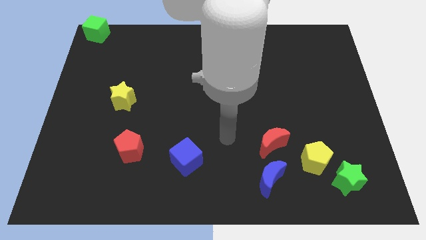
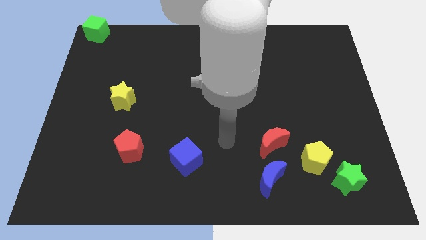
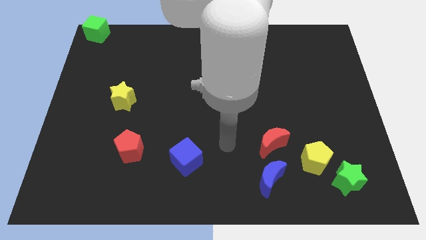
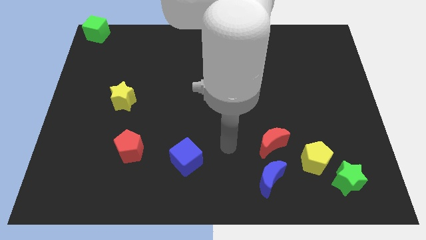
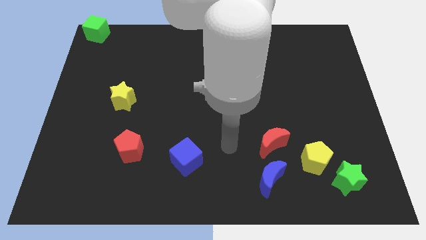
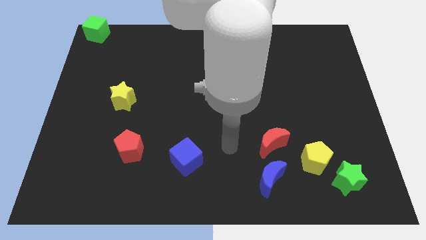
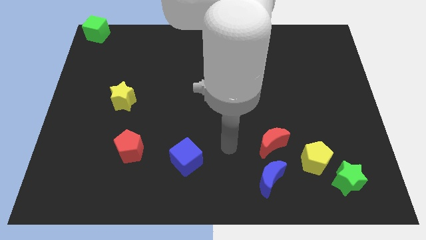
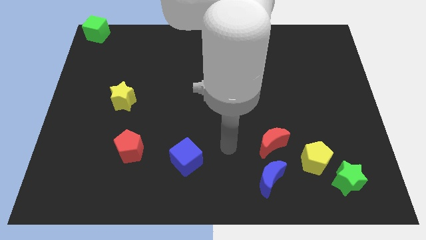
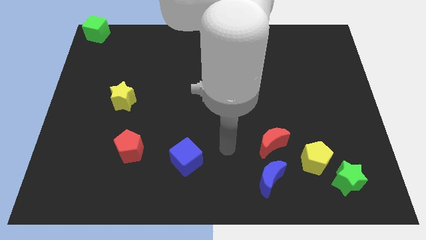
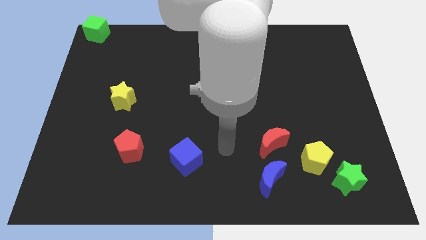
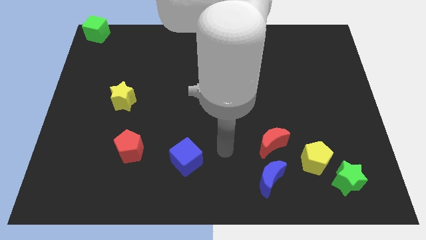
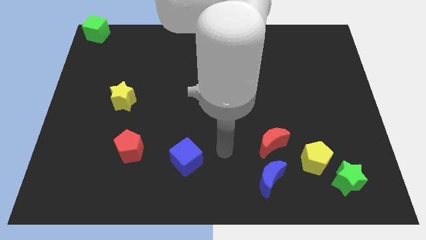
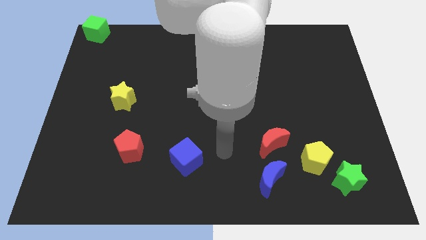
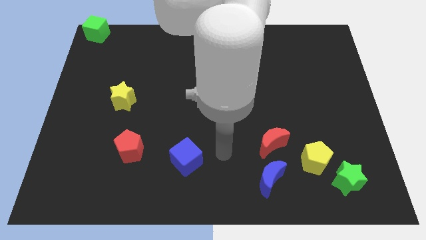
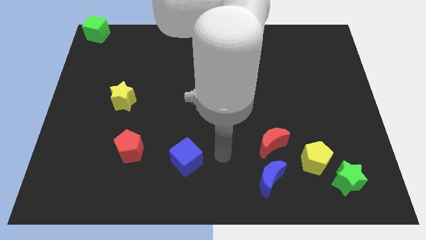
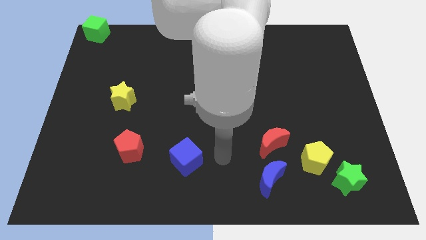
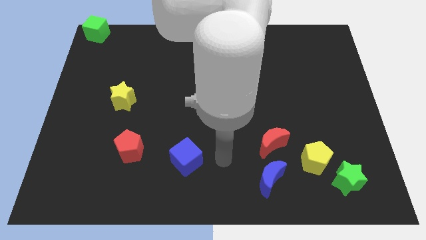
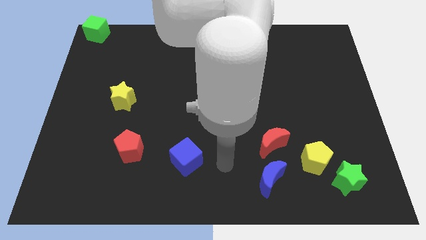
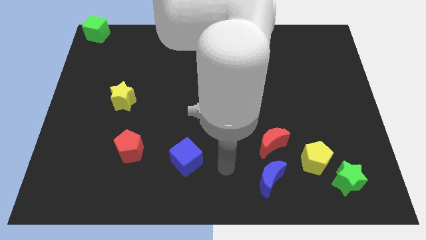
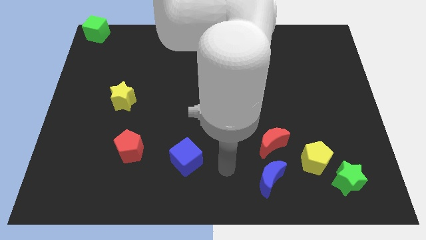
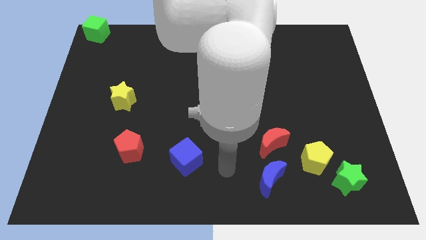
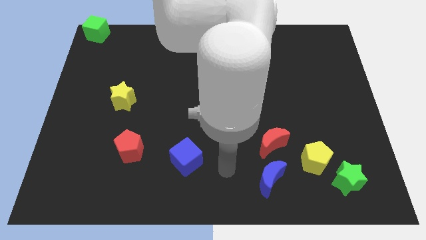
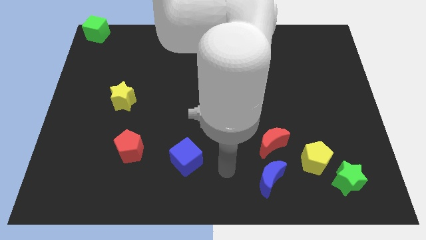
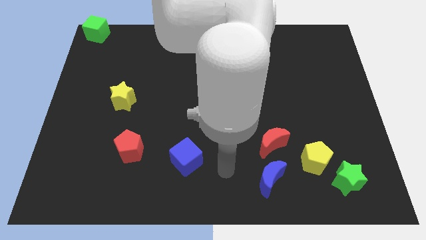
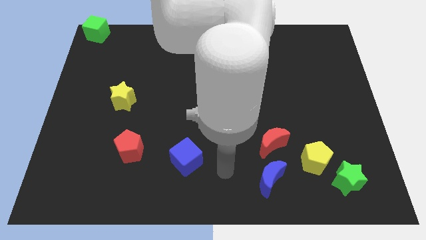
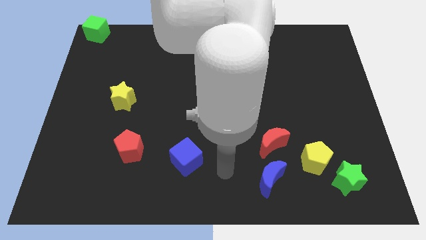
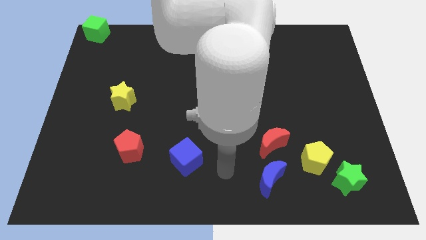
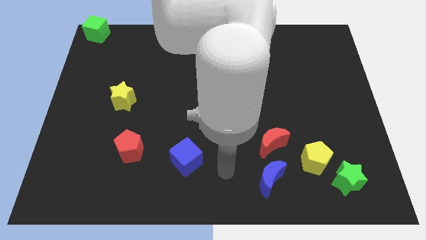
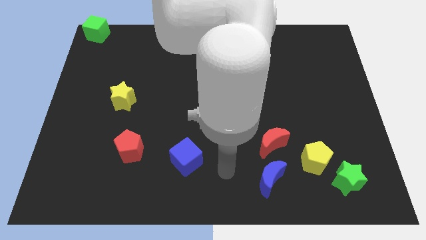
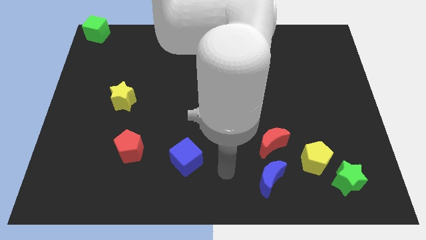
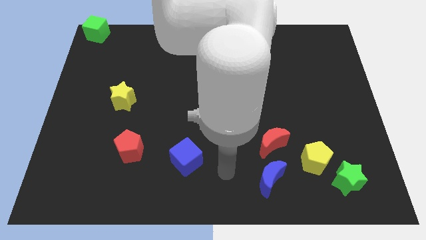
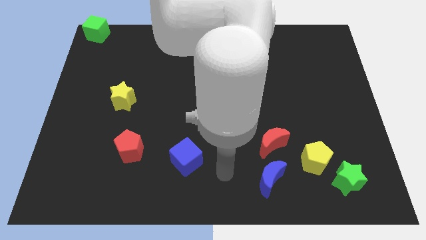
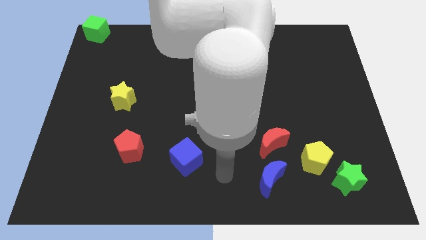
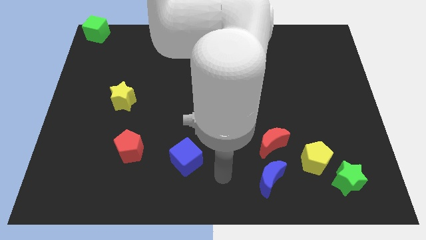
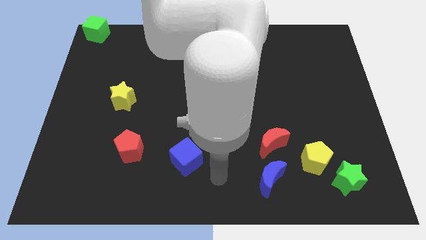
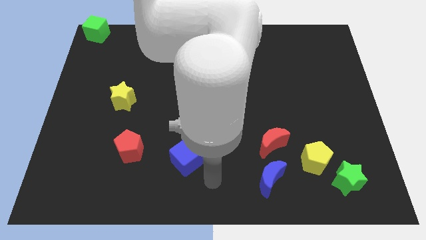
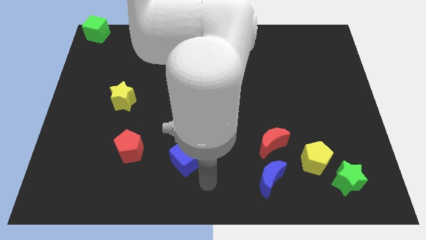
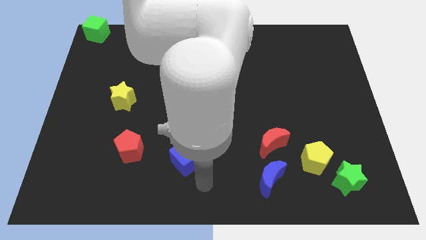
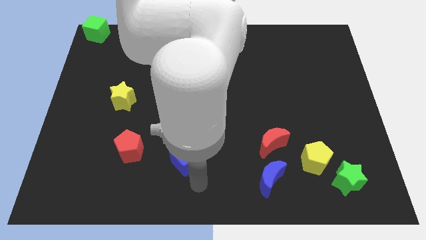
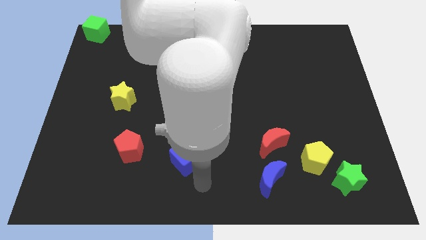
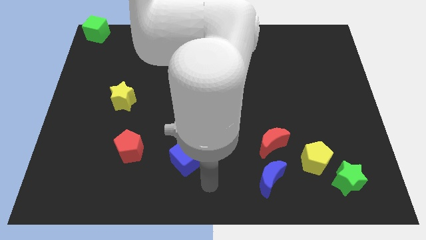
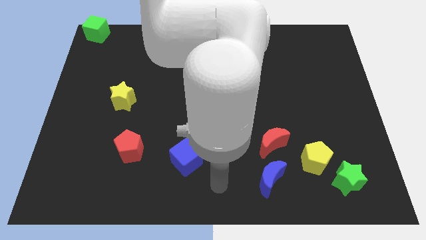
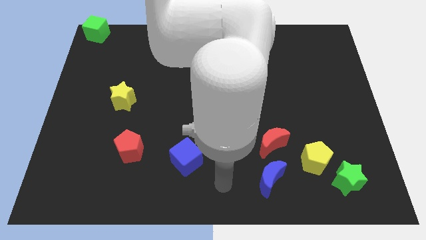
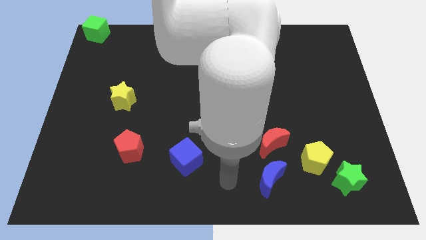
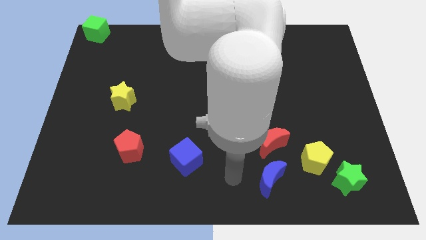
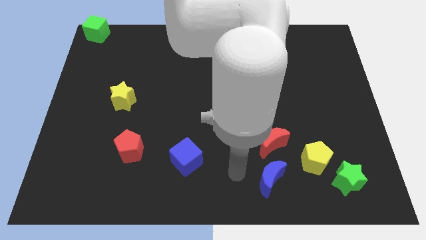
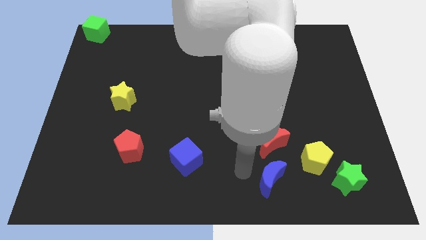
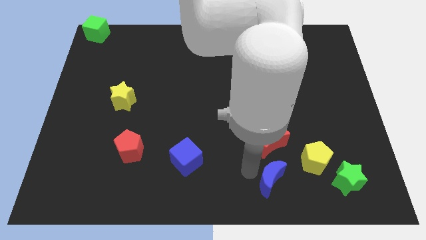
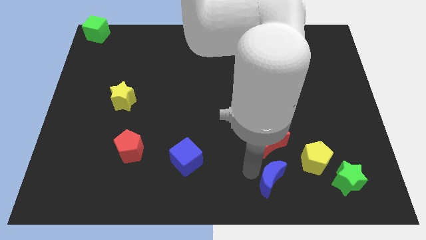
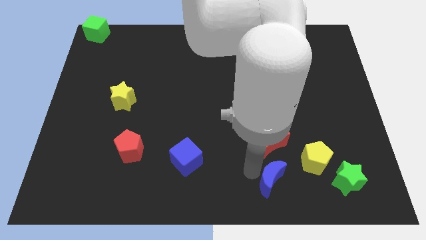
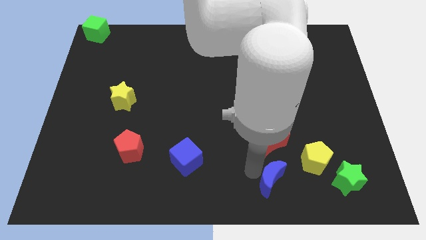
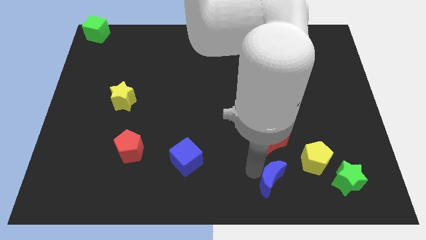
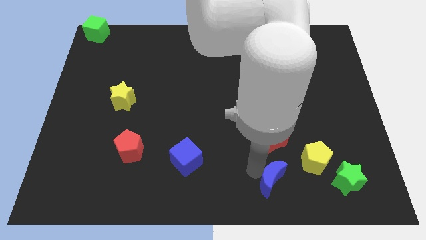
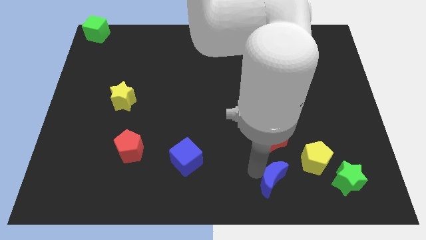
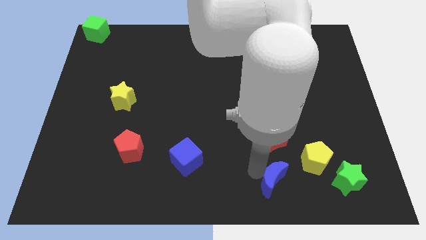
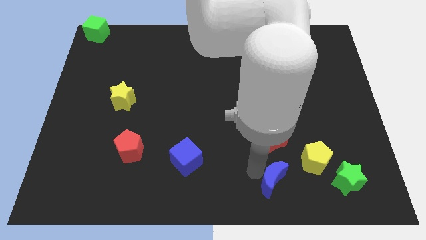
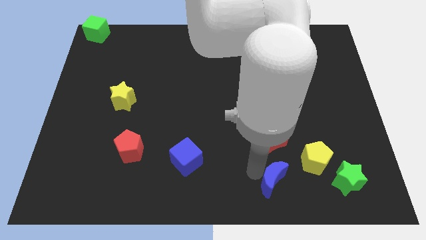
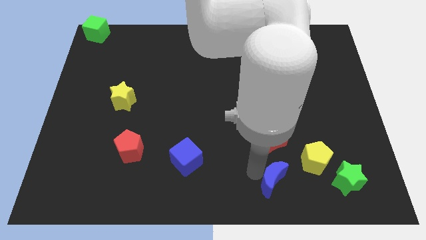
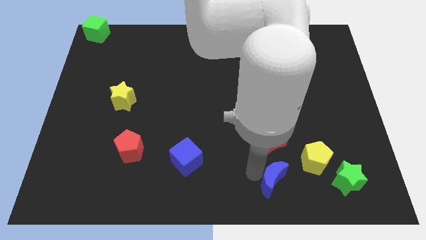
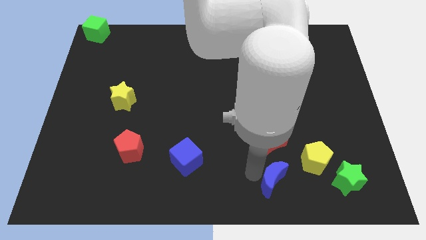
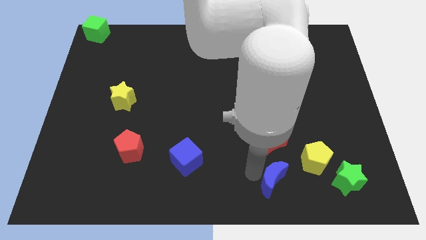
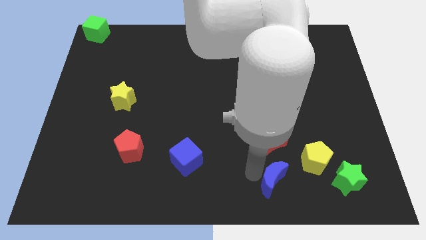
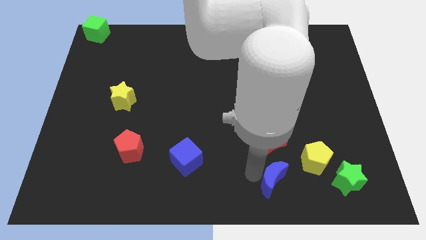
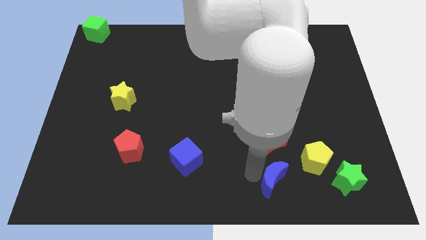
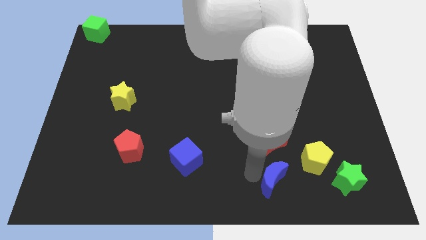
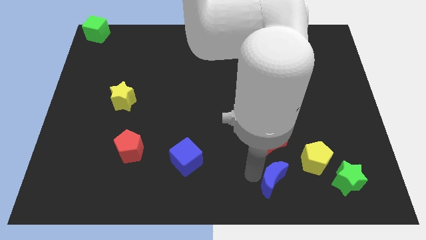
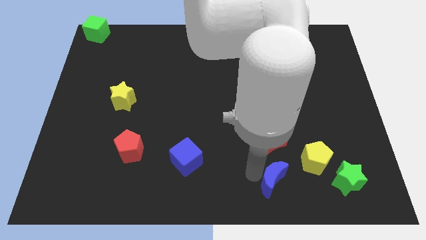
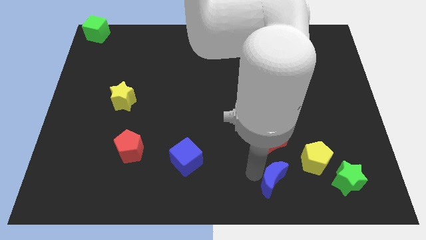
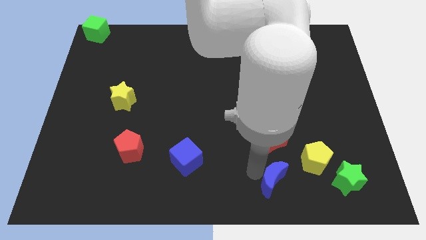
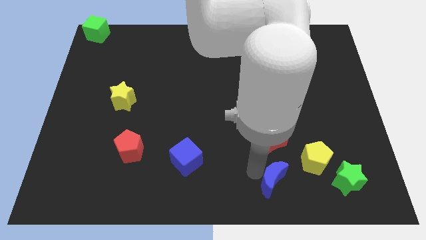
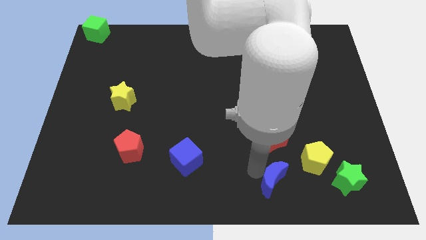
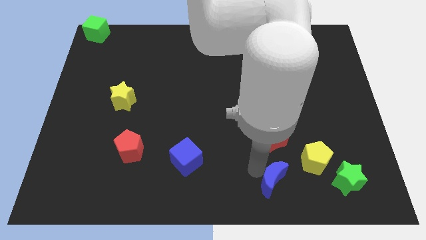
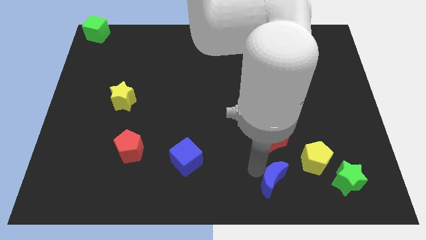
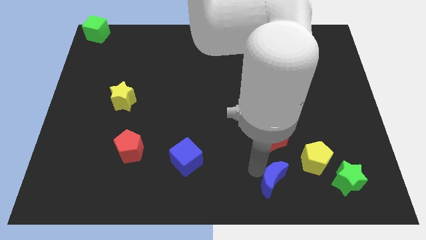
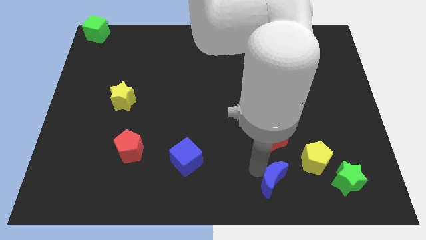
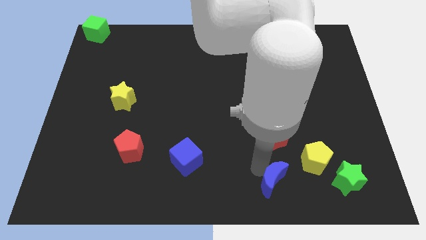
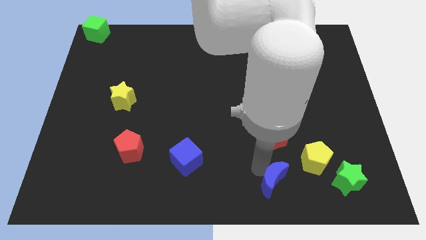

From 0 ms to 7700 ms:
move the arm to the bottom of the red crescent

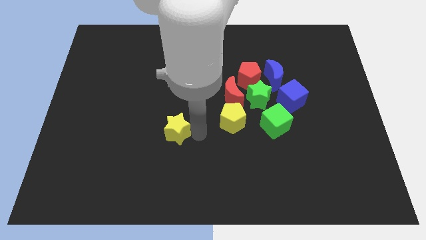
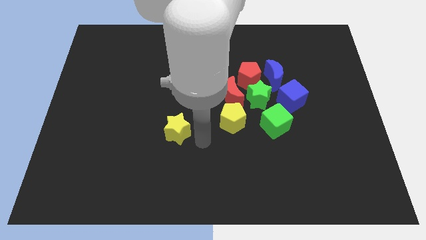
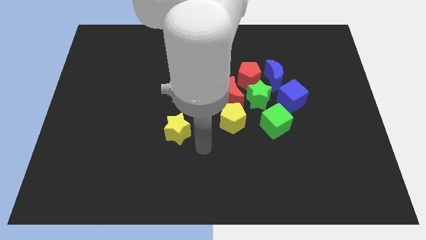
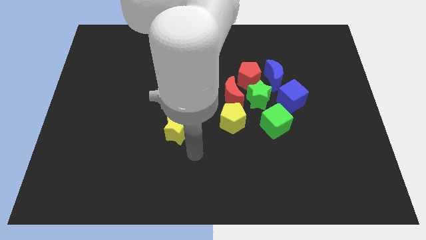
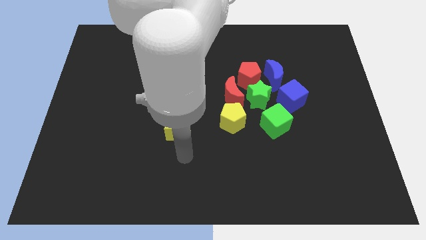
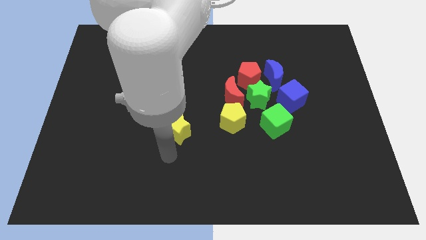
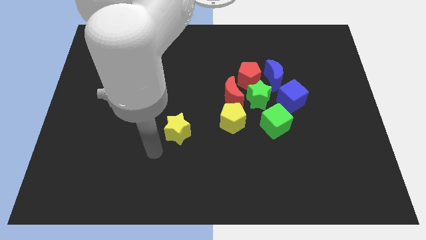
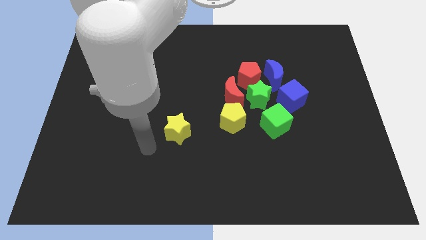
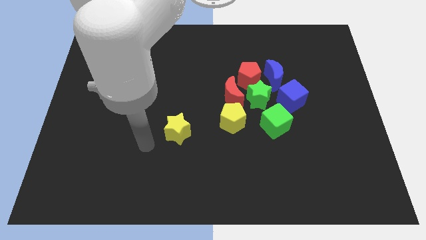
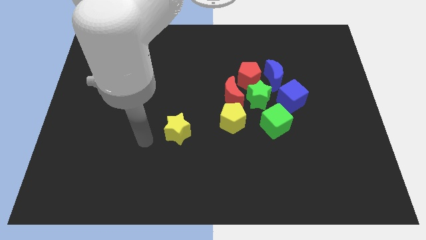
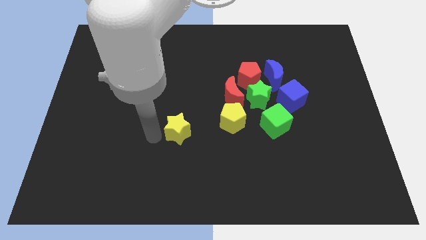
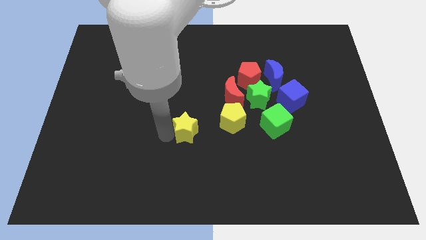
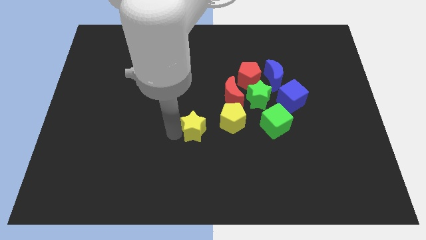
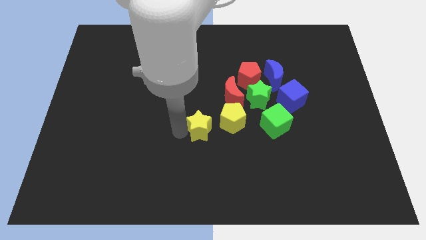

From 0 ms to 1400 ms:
slide the yellow star slightly to the right
